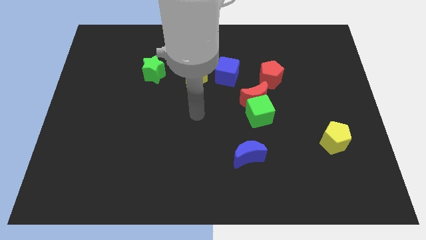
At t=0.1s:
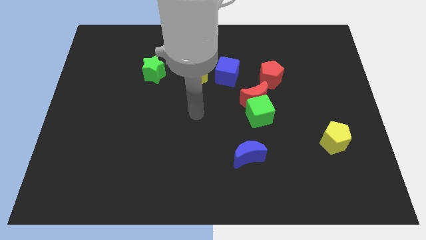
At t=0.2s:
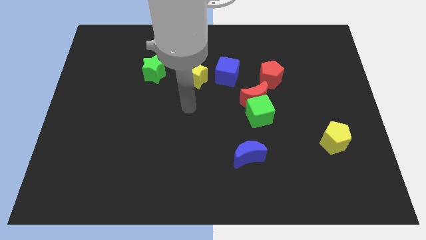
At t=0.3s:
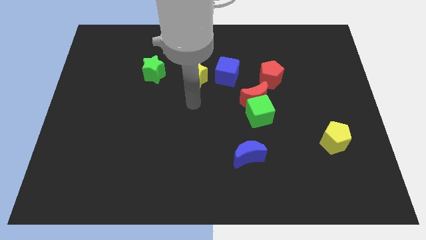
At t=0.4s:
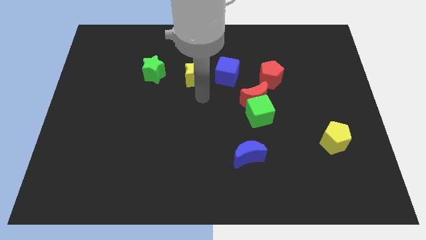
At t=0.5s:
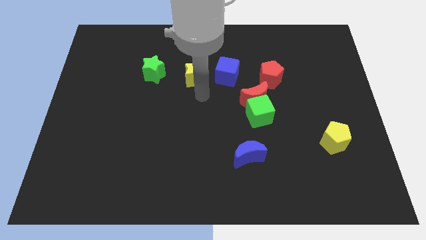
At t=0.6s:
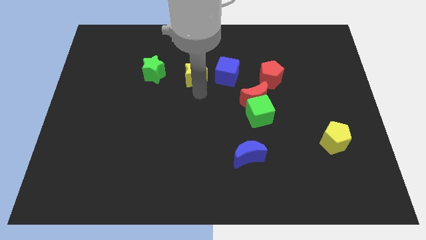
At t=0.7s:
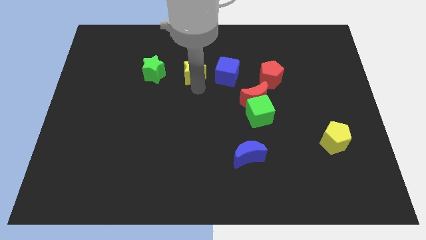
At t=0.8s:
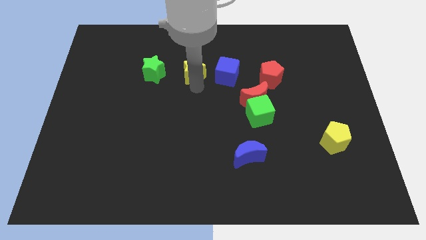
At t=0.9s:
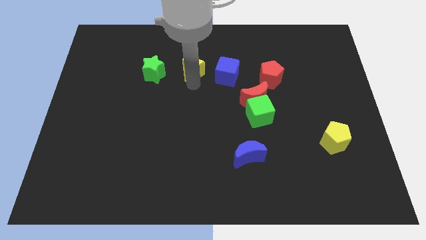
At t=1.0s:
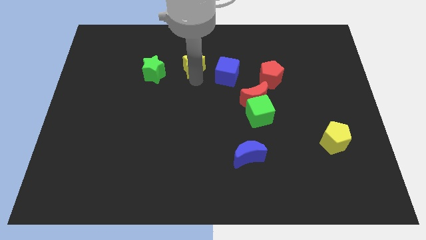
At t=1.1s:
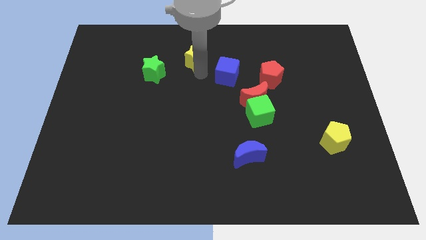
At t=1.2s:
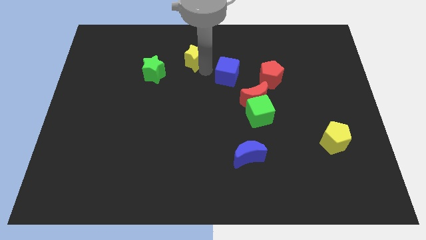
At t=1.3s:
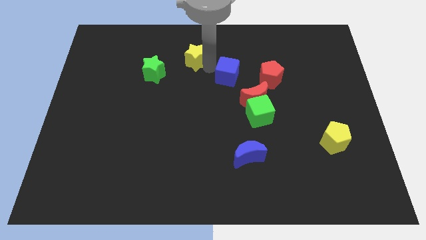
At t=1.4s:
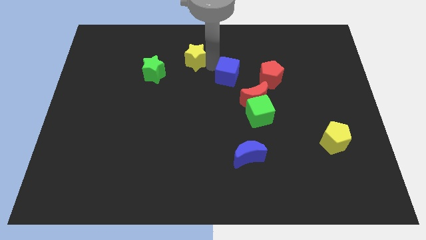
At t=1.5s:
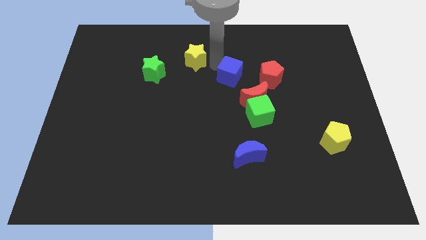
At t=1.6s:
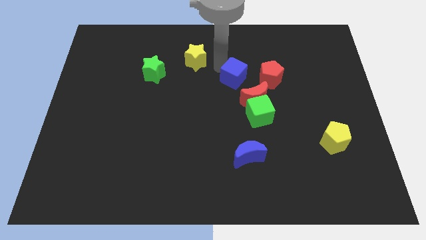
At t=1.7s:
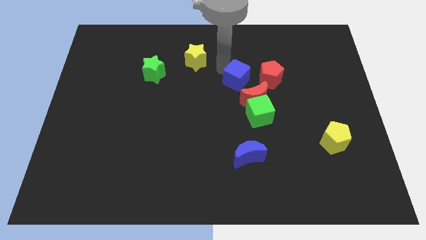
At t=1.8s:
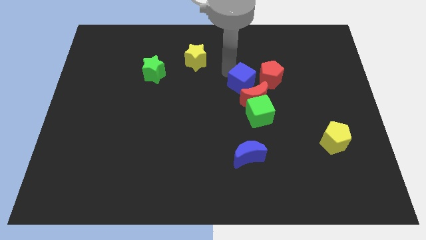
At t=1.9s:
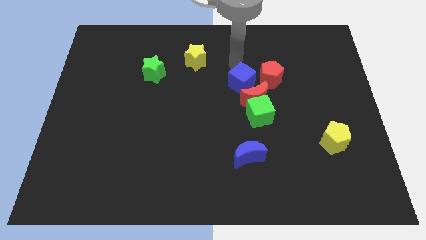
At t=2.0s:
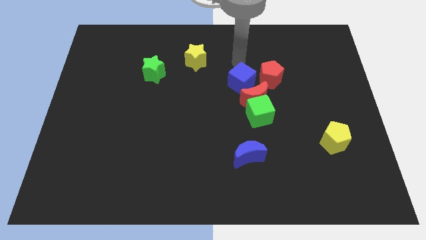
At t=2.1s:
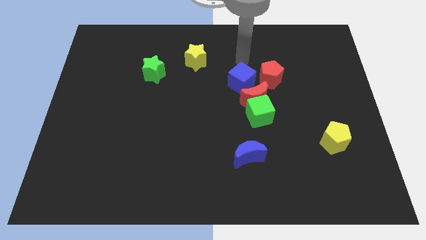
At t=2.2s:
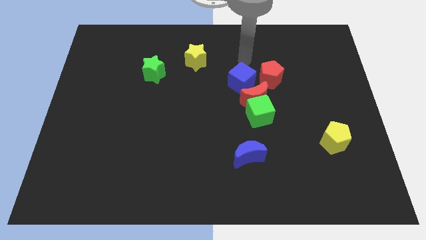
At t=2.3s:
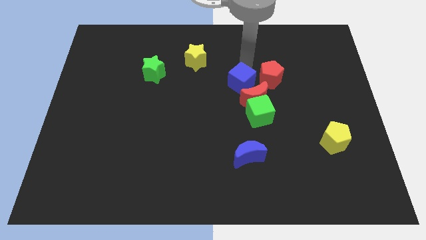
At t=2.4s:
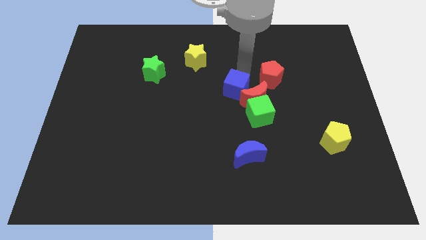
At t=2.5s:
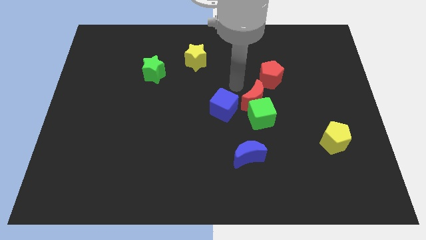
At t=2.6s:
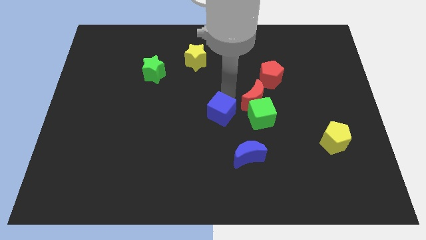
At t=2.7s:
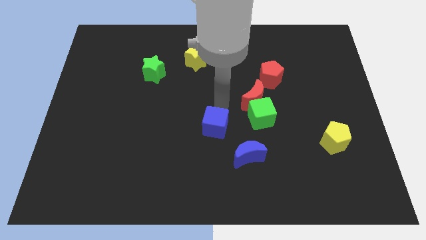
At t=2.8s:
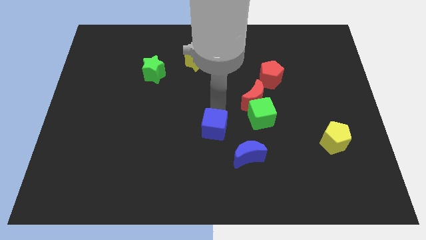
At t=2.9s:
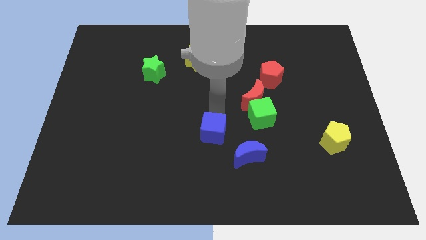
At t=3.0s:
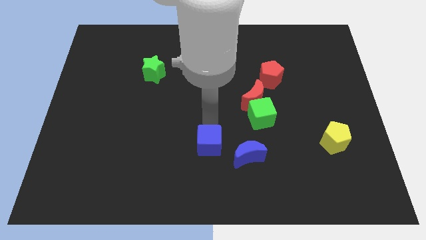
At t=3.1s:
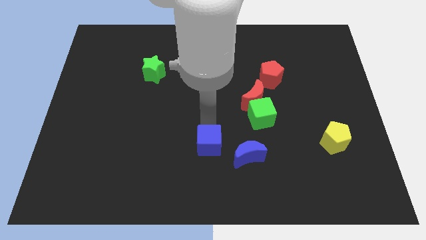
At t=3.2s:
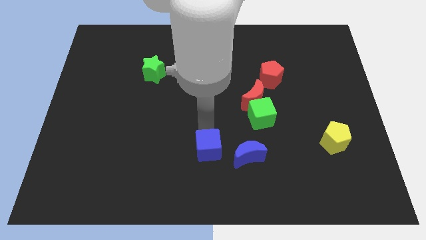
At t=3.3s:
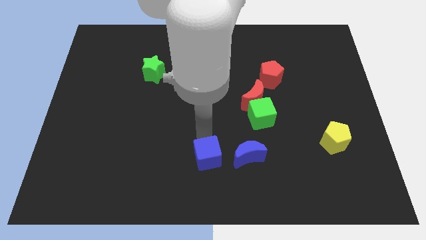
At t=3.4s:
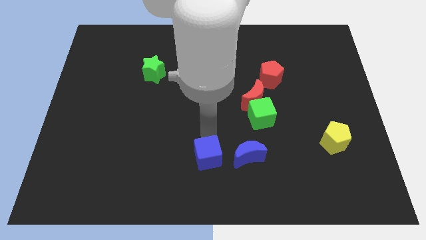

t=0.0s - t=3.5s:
place the blue cube to the left of the blue crescent

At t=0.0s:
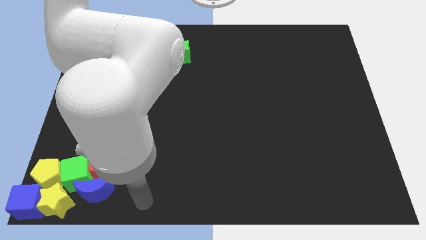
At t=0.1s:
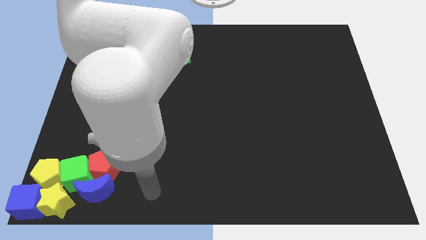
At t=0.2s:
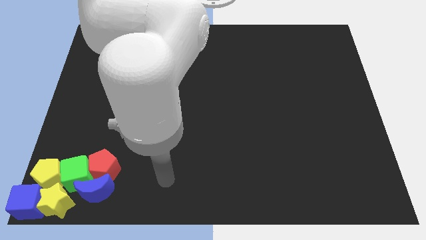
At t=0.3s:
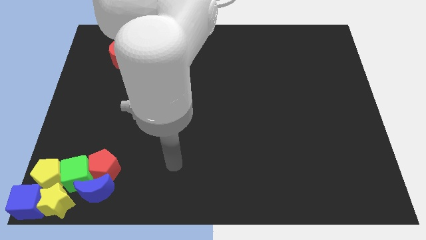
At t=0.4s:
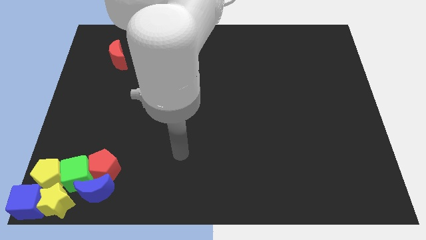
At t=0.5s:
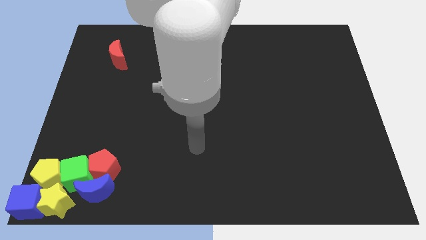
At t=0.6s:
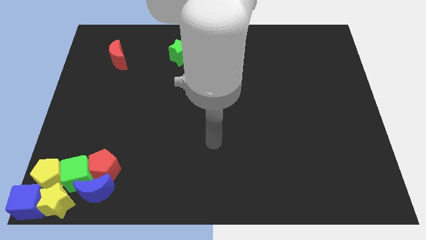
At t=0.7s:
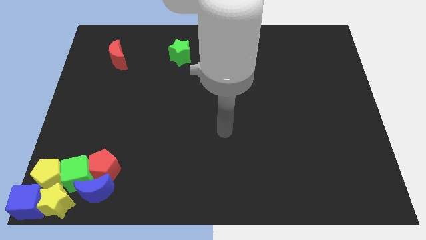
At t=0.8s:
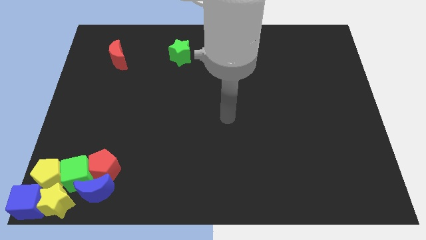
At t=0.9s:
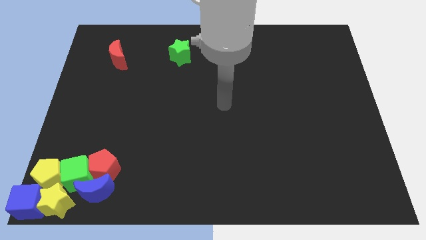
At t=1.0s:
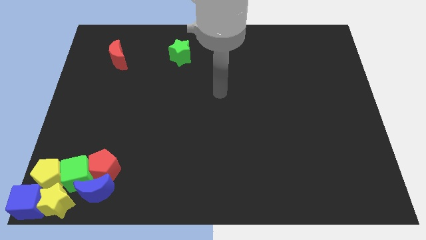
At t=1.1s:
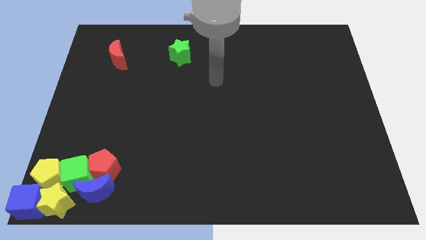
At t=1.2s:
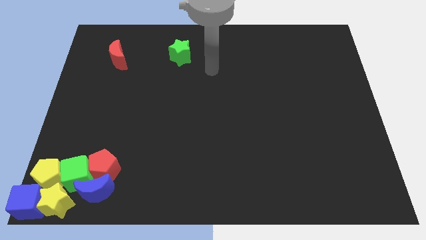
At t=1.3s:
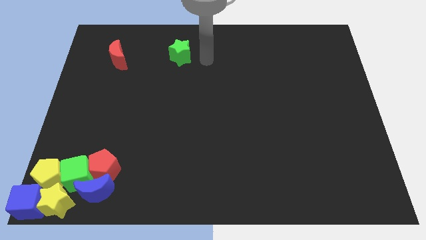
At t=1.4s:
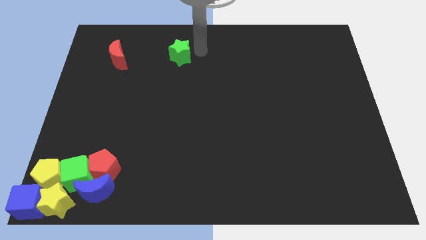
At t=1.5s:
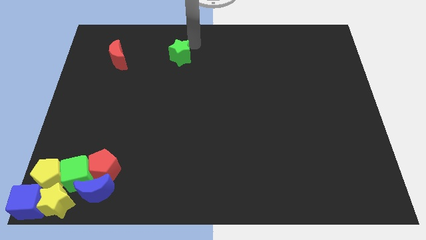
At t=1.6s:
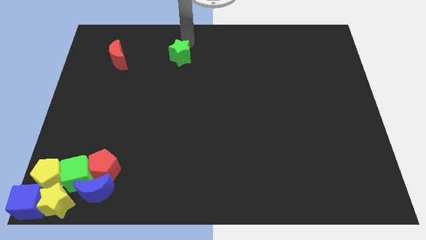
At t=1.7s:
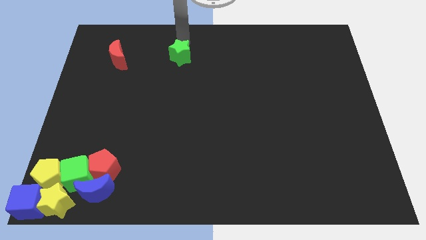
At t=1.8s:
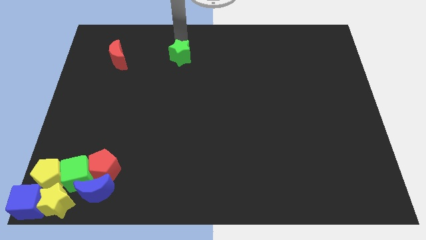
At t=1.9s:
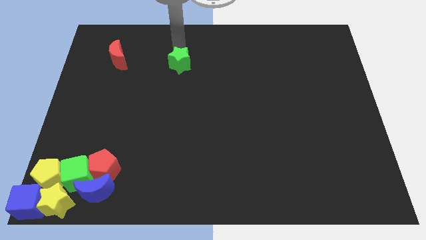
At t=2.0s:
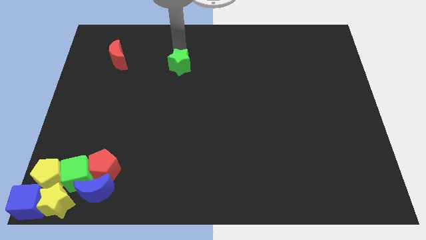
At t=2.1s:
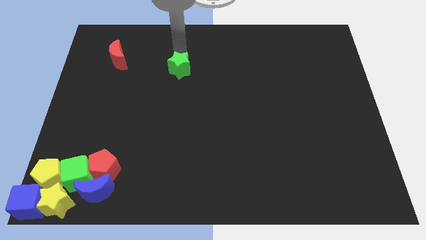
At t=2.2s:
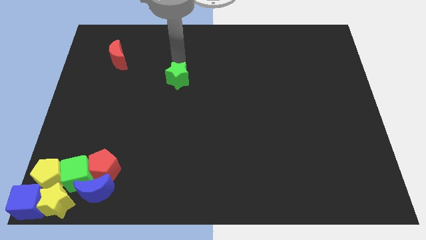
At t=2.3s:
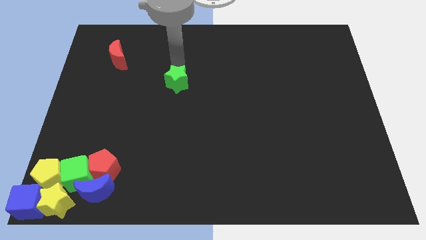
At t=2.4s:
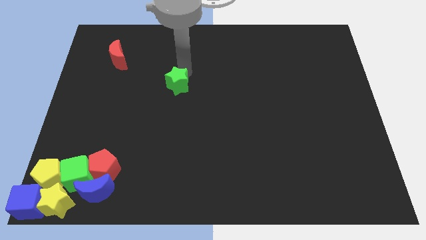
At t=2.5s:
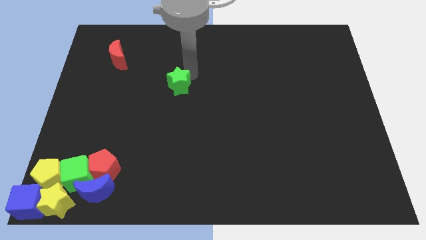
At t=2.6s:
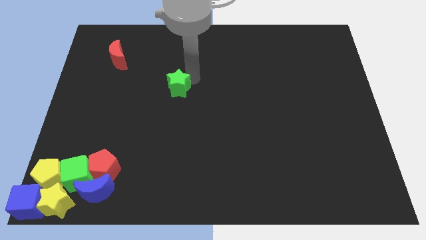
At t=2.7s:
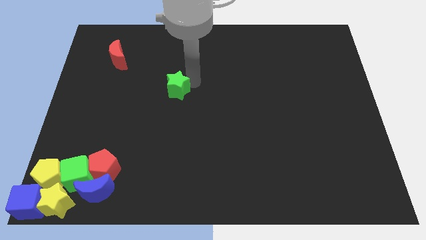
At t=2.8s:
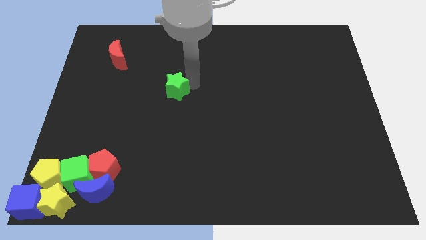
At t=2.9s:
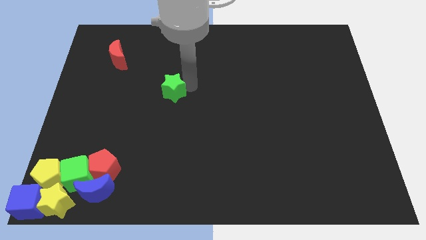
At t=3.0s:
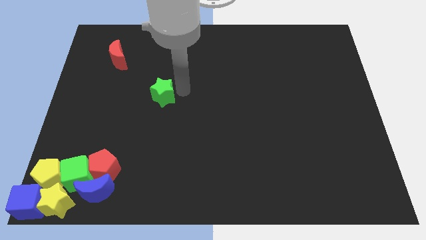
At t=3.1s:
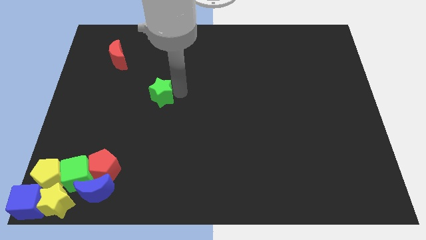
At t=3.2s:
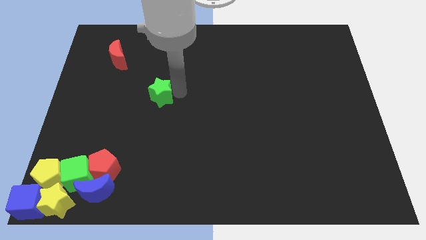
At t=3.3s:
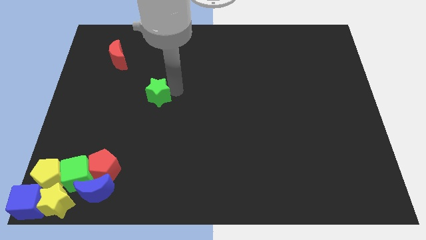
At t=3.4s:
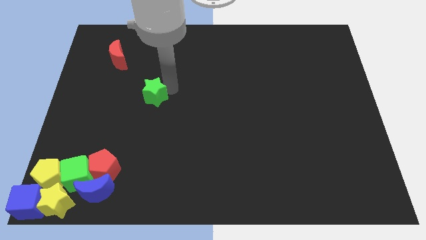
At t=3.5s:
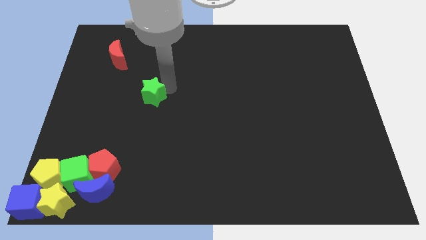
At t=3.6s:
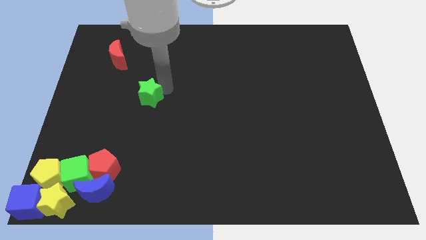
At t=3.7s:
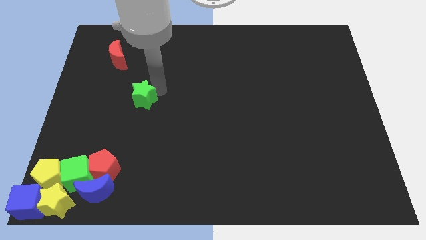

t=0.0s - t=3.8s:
move the green star diagonally on the bottom right of the red moon

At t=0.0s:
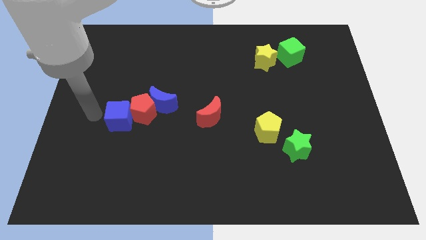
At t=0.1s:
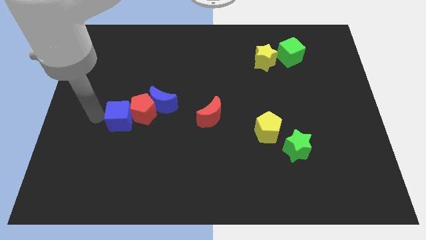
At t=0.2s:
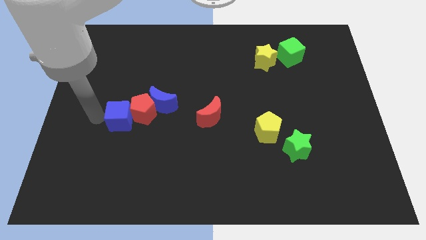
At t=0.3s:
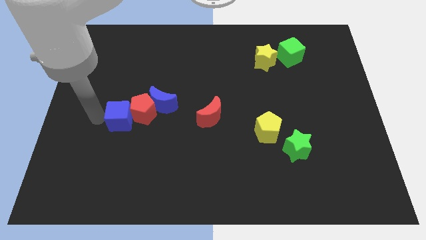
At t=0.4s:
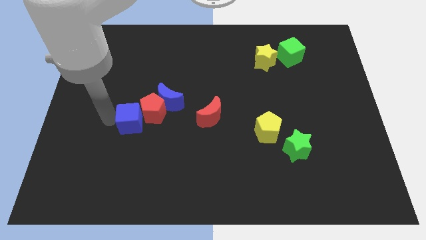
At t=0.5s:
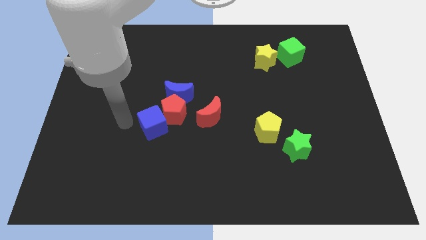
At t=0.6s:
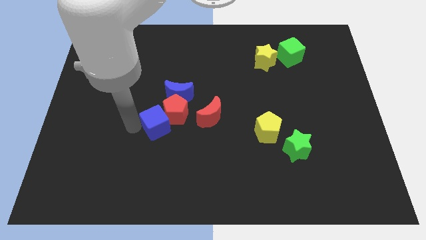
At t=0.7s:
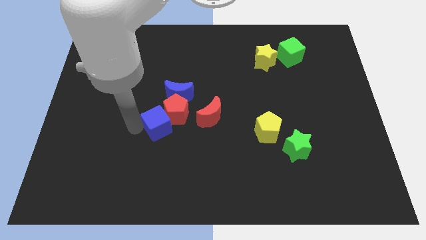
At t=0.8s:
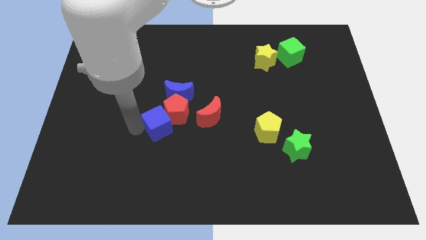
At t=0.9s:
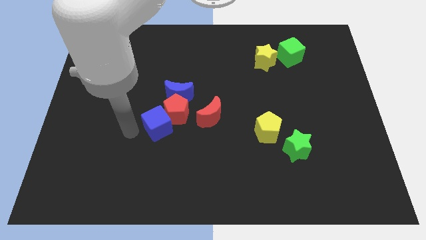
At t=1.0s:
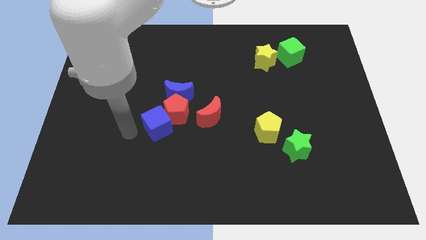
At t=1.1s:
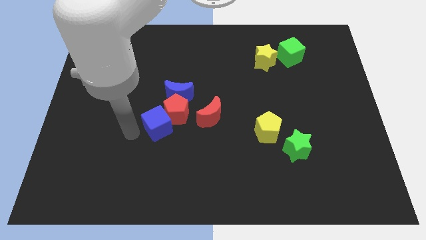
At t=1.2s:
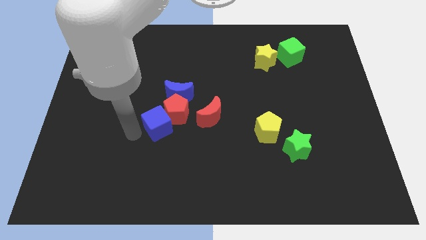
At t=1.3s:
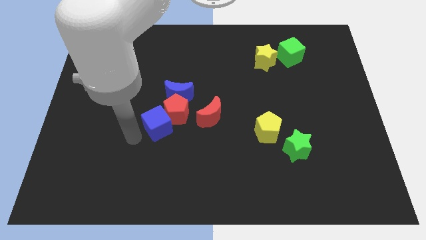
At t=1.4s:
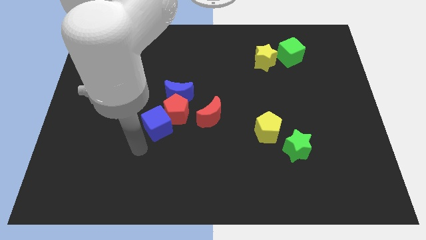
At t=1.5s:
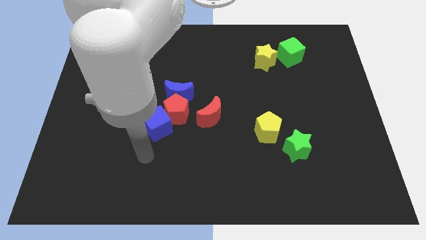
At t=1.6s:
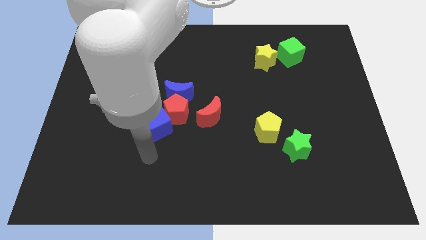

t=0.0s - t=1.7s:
move blue block along with red pentagon to the center of the board
